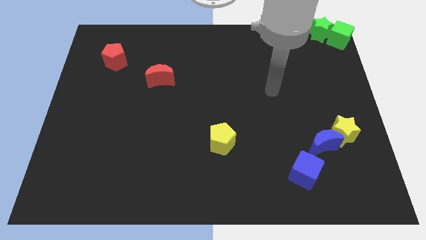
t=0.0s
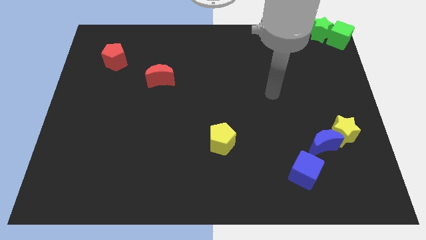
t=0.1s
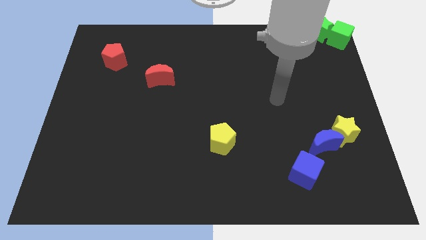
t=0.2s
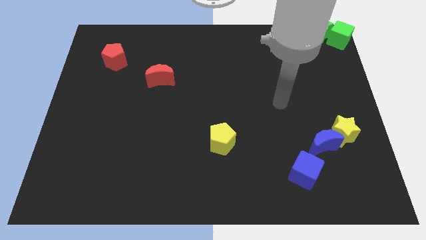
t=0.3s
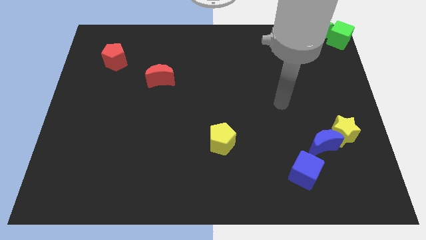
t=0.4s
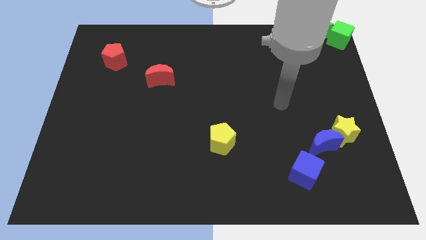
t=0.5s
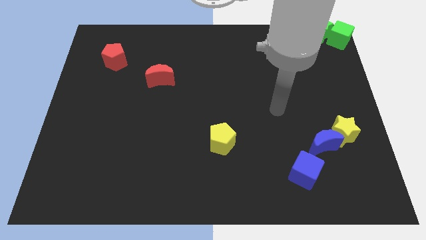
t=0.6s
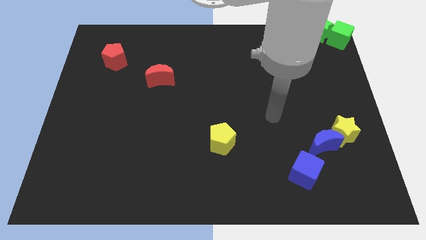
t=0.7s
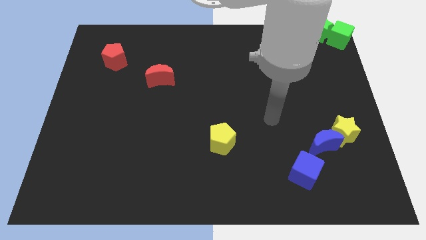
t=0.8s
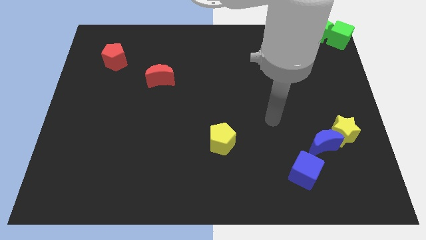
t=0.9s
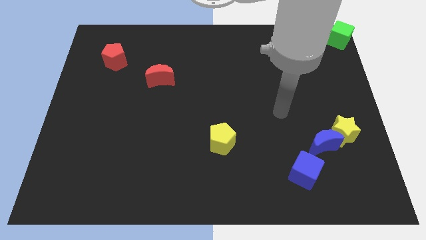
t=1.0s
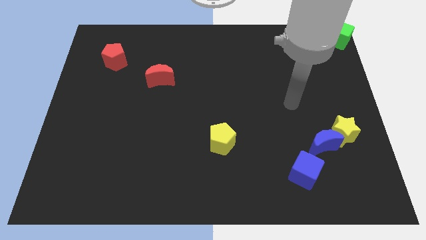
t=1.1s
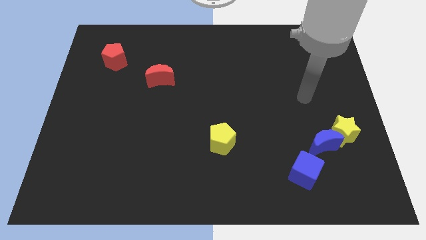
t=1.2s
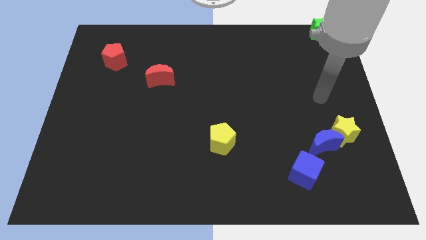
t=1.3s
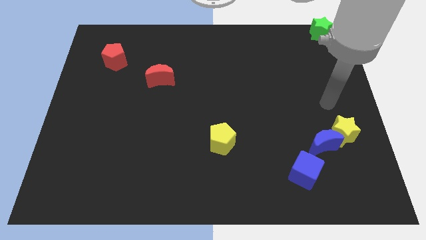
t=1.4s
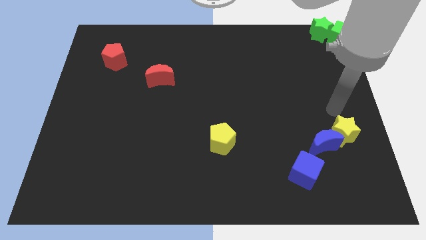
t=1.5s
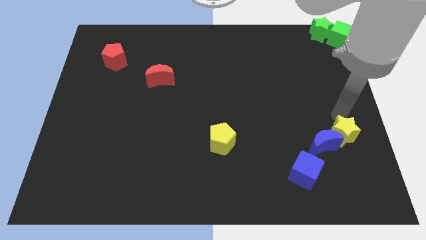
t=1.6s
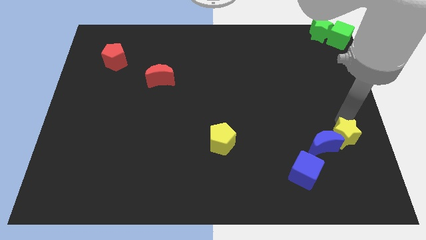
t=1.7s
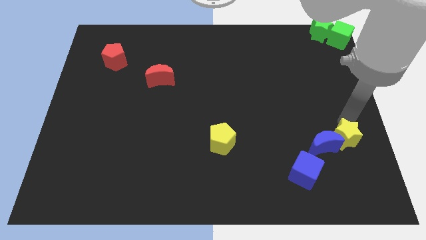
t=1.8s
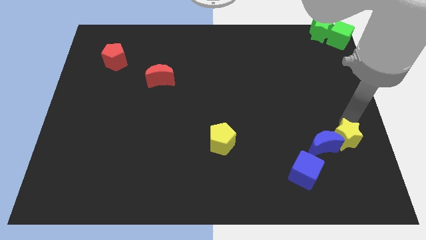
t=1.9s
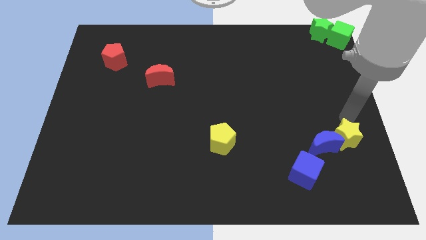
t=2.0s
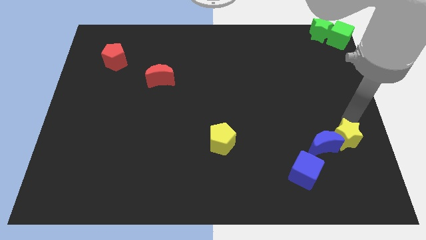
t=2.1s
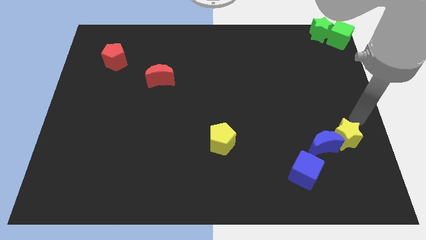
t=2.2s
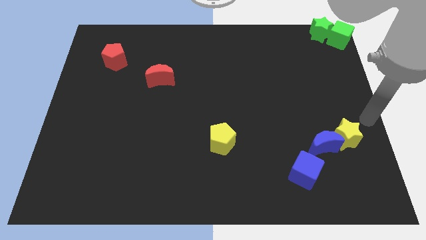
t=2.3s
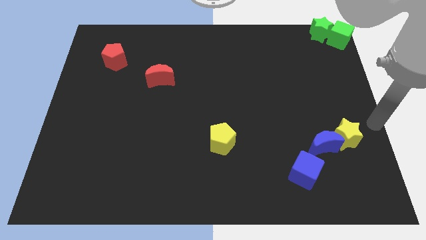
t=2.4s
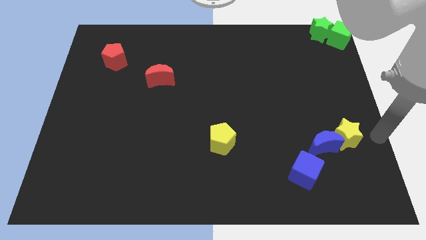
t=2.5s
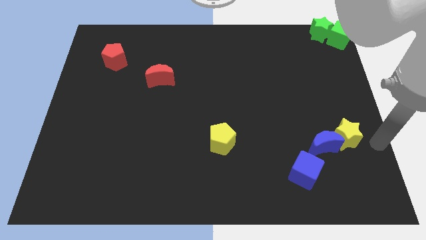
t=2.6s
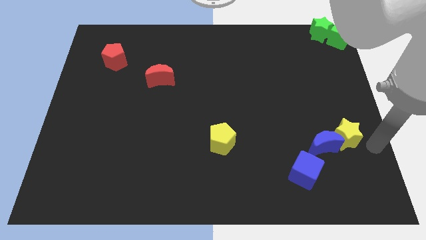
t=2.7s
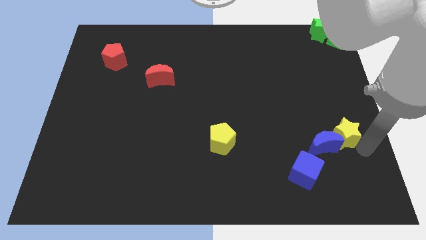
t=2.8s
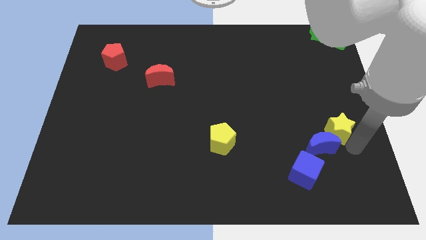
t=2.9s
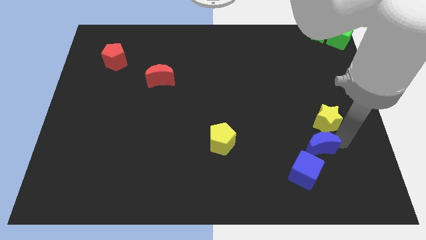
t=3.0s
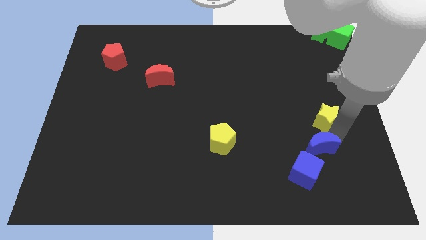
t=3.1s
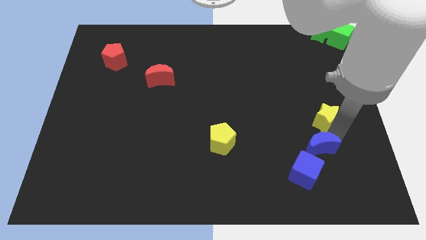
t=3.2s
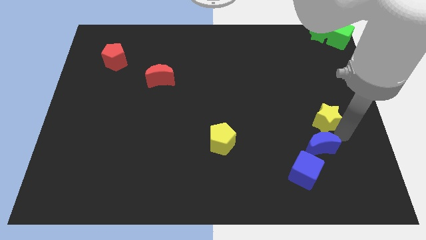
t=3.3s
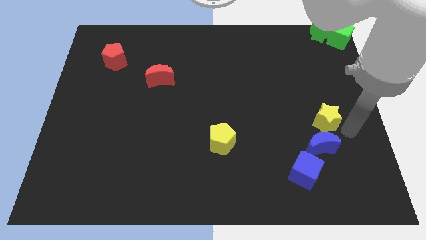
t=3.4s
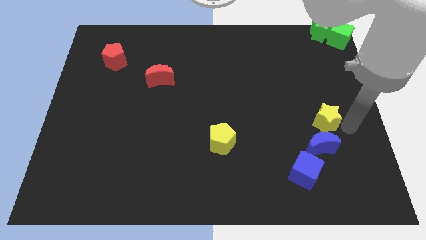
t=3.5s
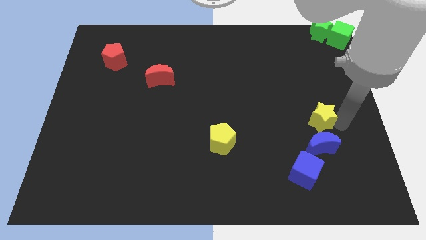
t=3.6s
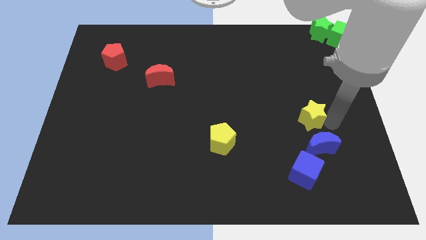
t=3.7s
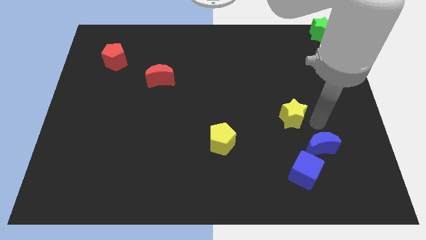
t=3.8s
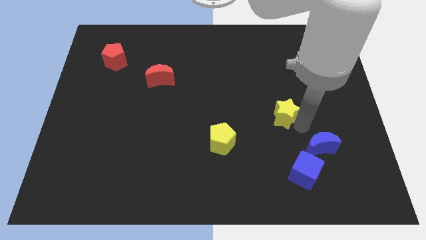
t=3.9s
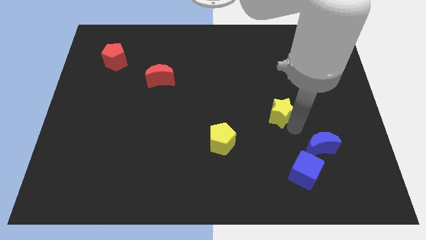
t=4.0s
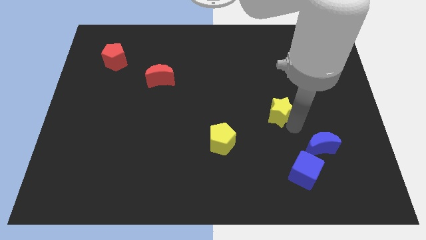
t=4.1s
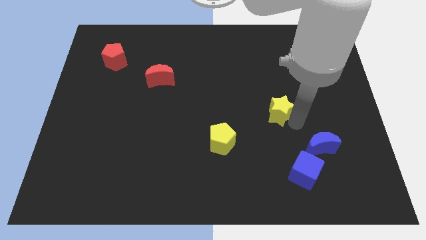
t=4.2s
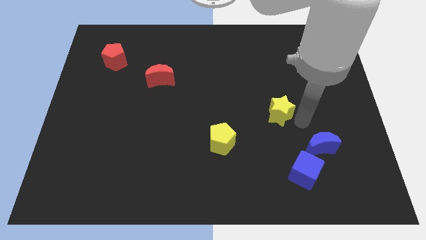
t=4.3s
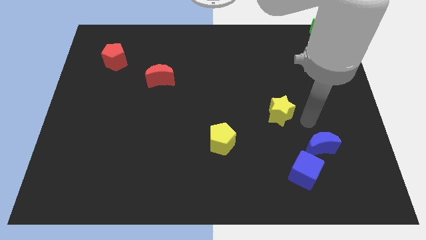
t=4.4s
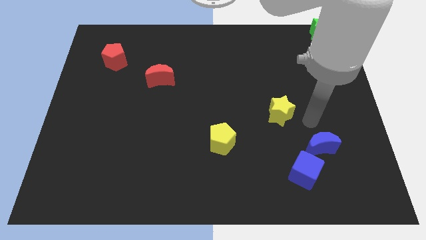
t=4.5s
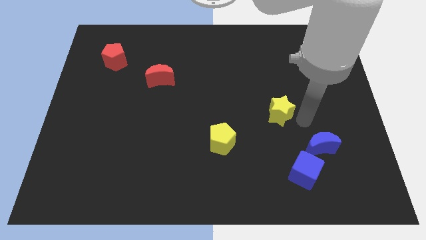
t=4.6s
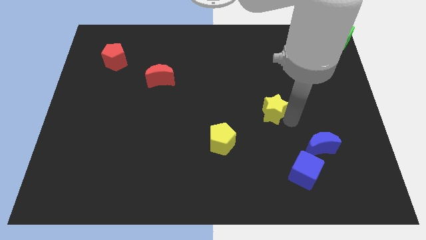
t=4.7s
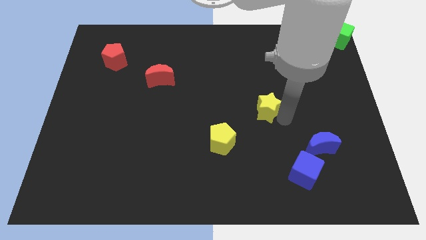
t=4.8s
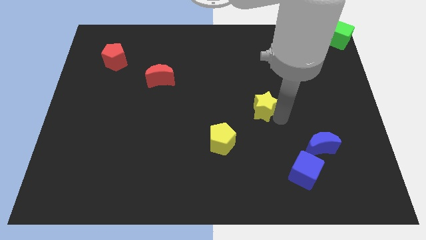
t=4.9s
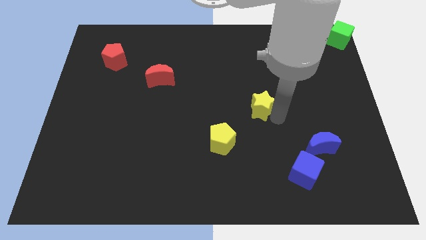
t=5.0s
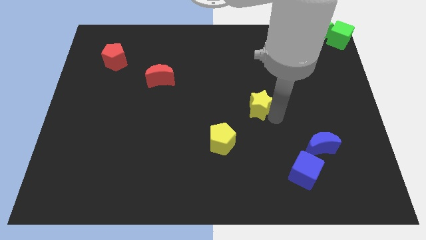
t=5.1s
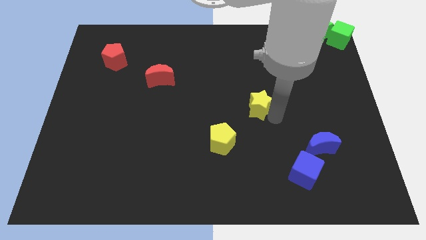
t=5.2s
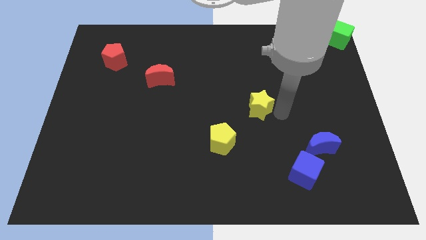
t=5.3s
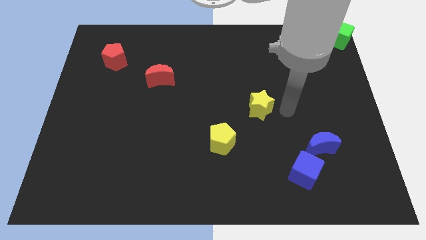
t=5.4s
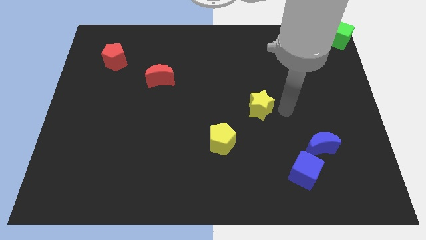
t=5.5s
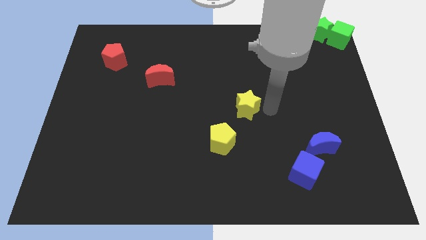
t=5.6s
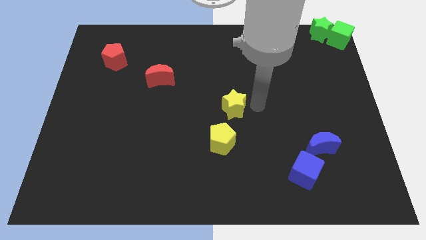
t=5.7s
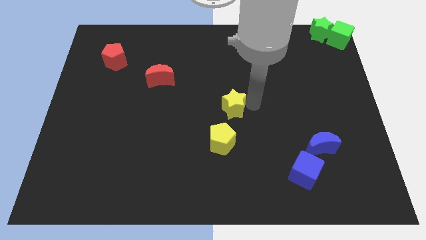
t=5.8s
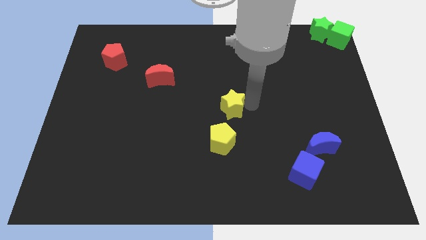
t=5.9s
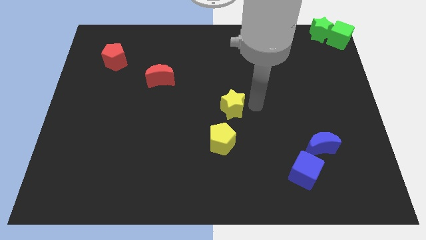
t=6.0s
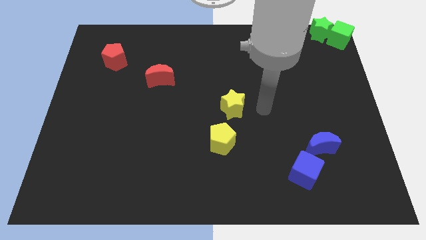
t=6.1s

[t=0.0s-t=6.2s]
place the yellow star above the yellow pentagon

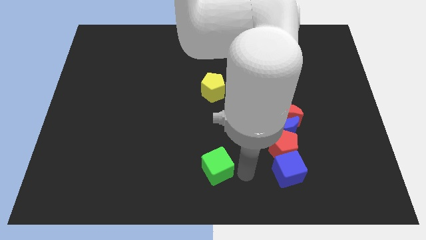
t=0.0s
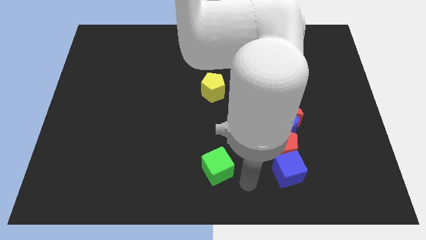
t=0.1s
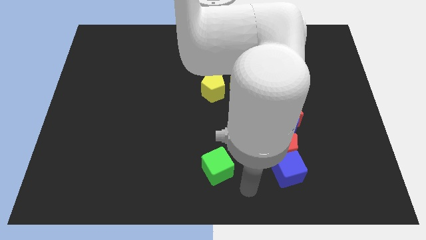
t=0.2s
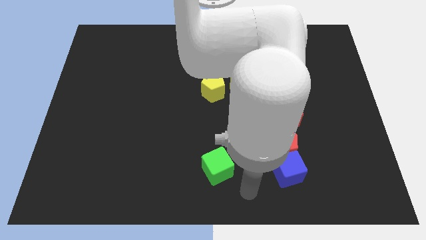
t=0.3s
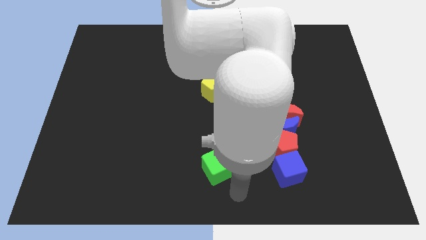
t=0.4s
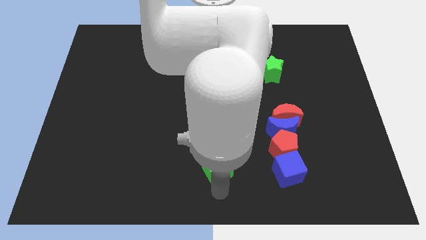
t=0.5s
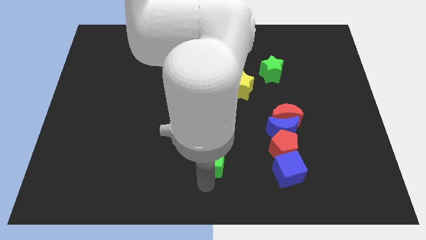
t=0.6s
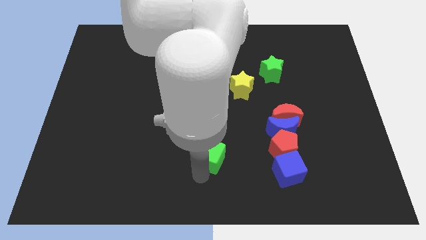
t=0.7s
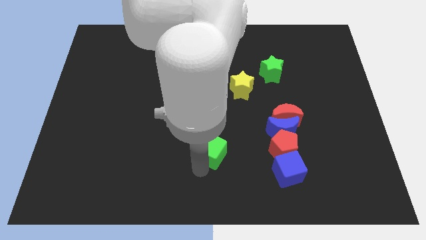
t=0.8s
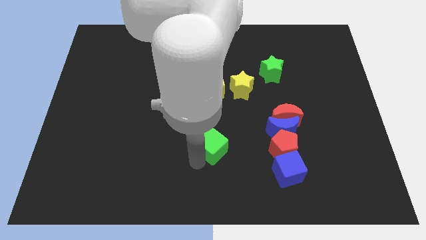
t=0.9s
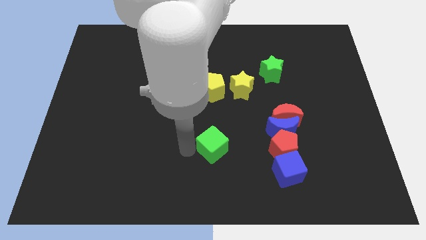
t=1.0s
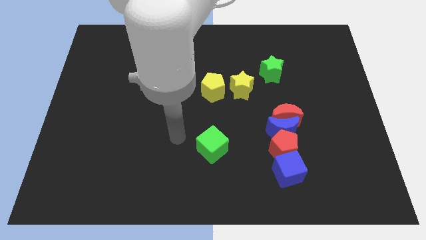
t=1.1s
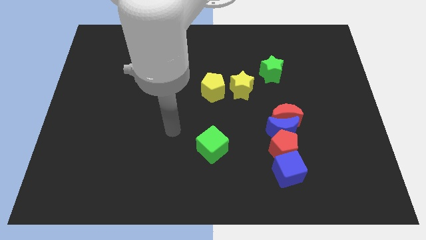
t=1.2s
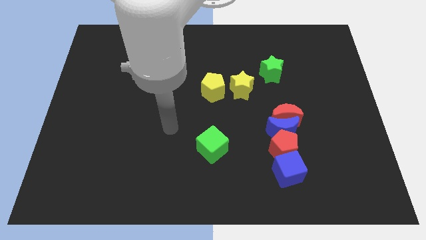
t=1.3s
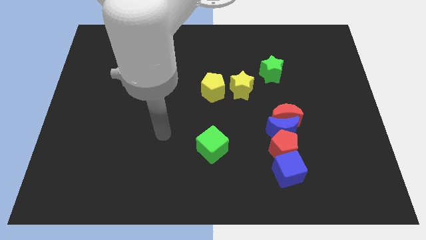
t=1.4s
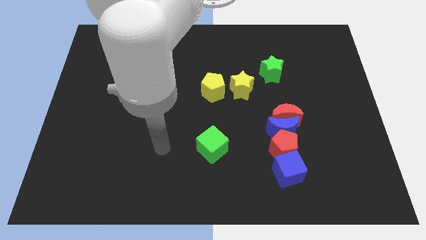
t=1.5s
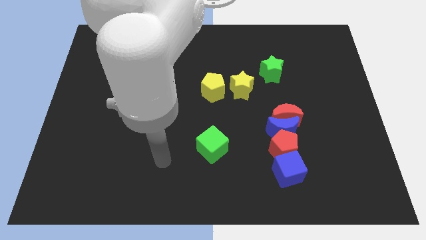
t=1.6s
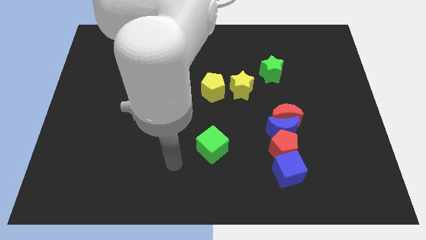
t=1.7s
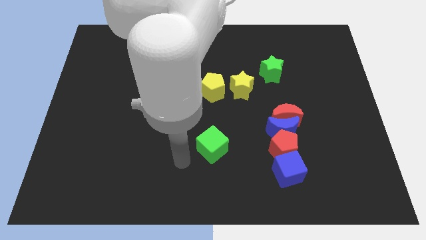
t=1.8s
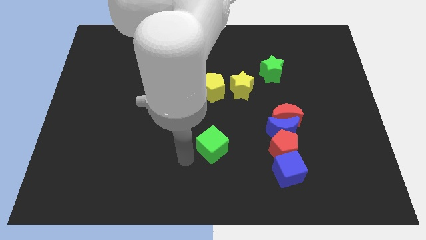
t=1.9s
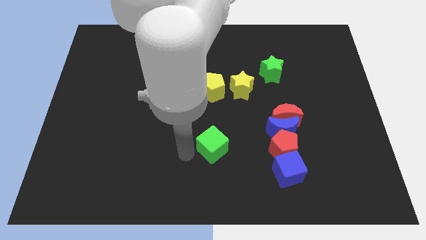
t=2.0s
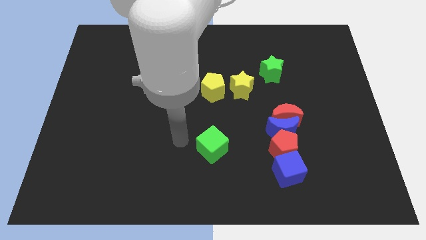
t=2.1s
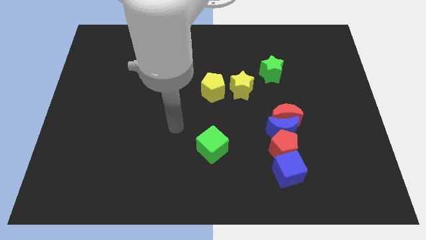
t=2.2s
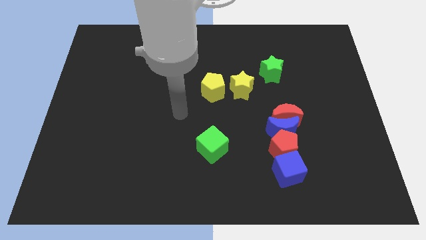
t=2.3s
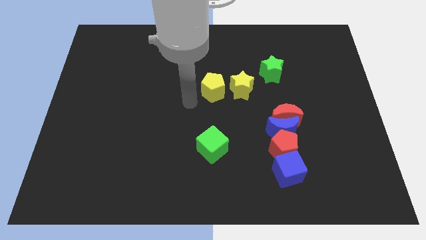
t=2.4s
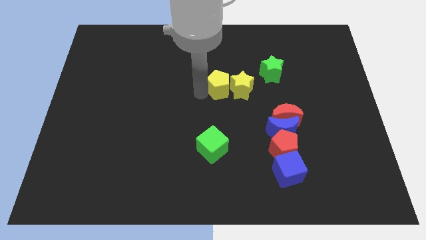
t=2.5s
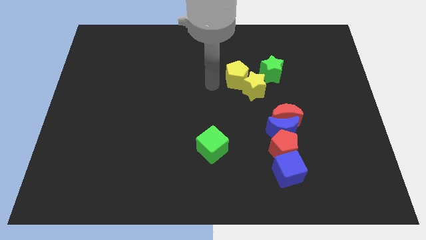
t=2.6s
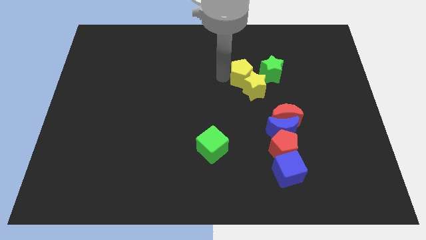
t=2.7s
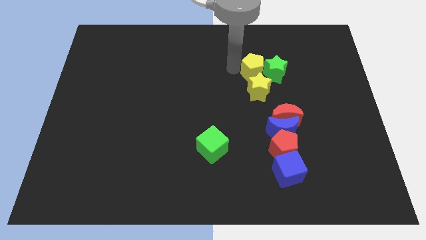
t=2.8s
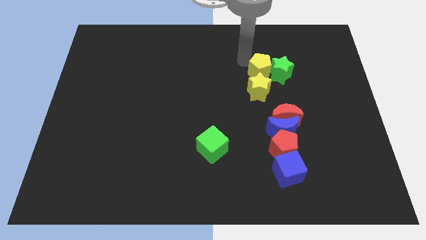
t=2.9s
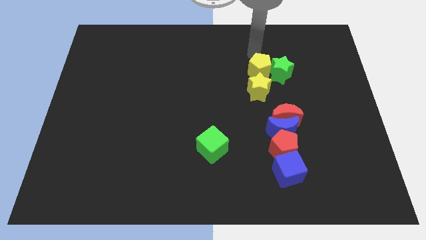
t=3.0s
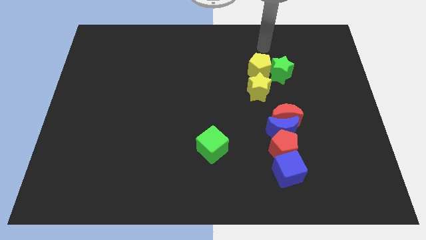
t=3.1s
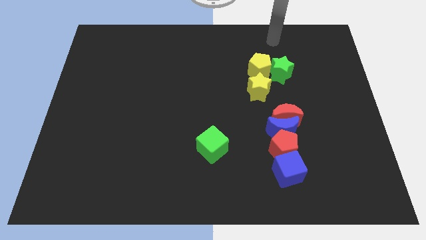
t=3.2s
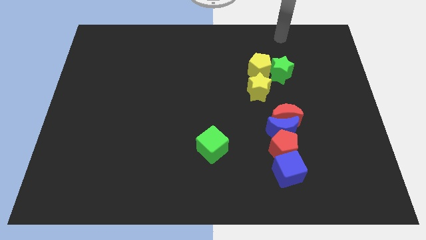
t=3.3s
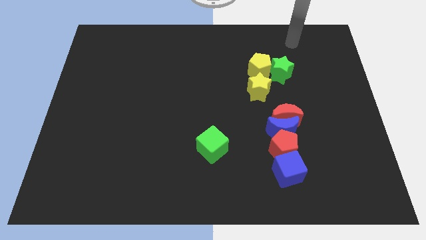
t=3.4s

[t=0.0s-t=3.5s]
place yellow pentagon beside green star
